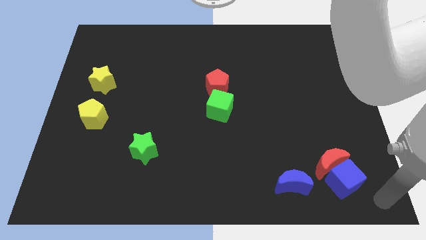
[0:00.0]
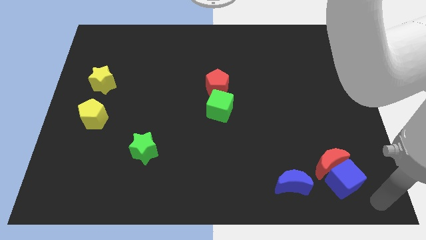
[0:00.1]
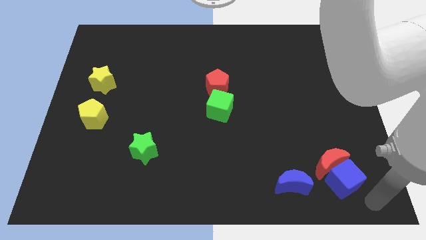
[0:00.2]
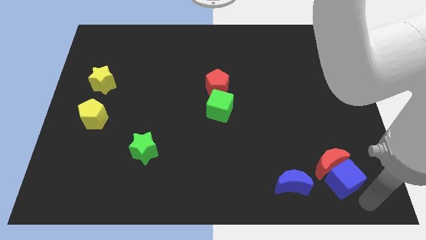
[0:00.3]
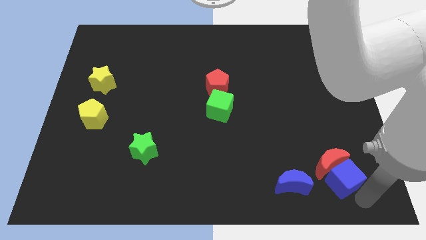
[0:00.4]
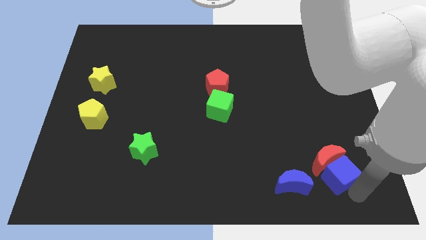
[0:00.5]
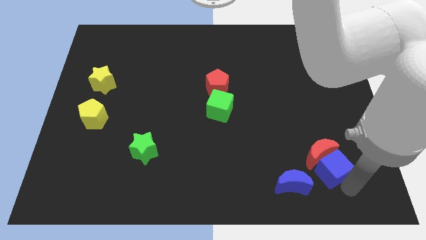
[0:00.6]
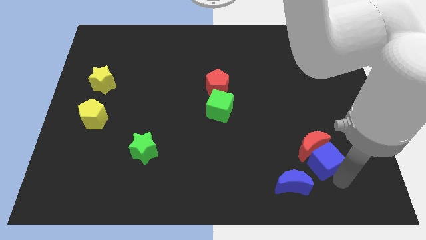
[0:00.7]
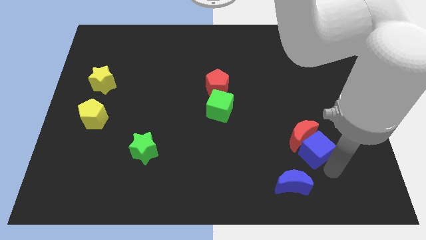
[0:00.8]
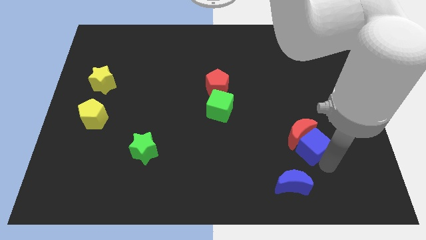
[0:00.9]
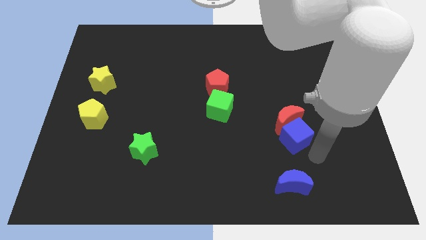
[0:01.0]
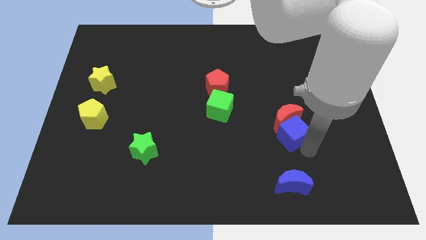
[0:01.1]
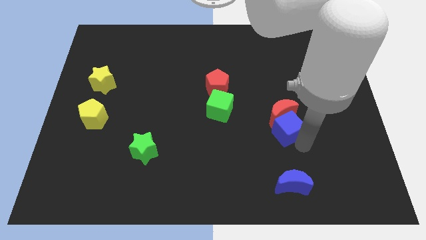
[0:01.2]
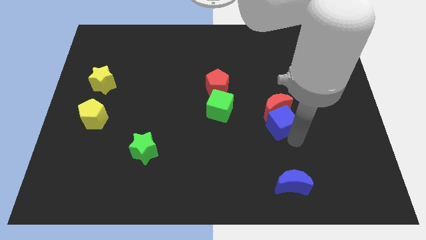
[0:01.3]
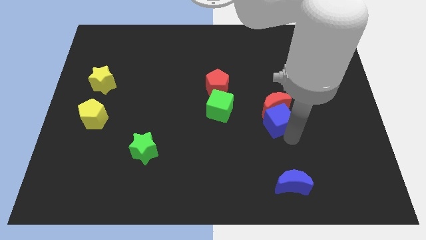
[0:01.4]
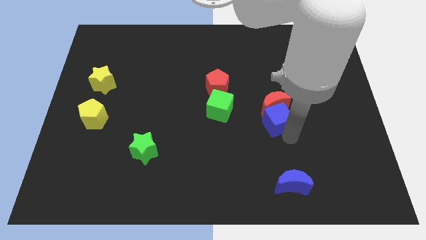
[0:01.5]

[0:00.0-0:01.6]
move the blue cube and red moon to the right side of the green cube

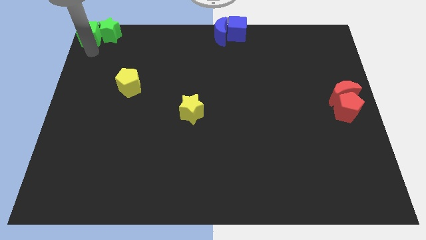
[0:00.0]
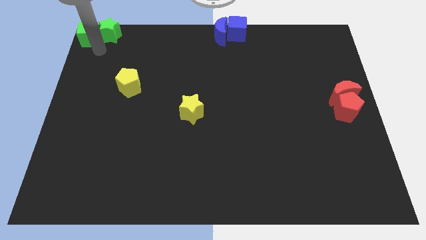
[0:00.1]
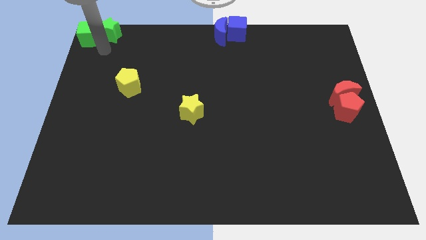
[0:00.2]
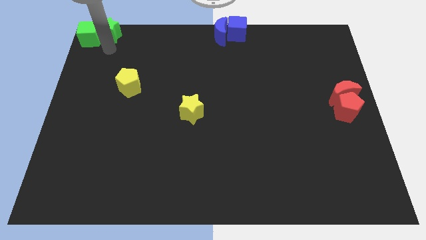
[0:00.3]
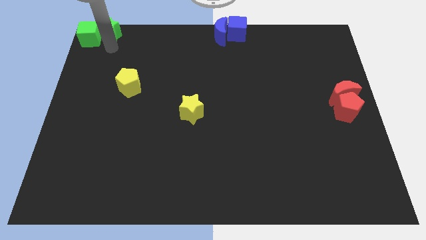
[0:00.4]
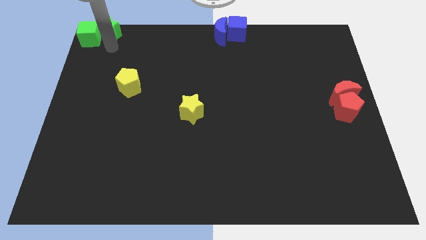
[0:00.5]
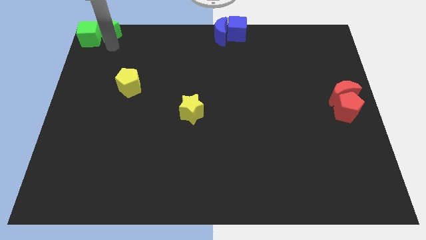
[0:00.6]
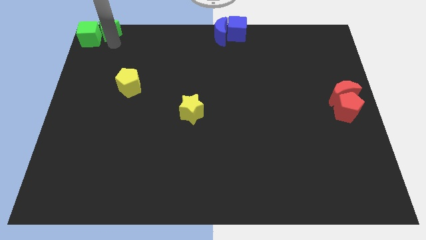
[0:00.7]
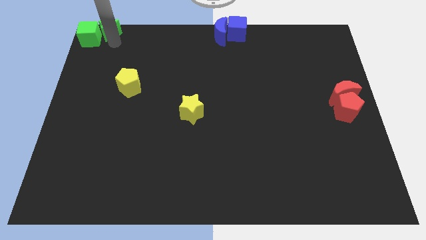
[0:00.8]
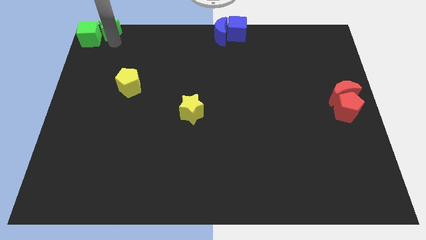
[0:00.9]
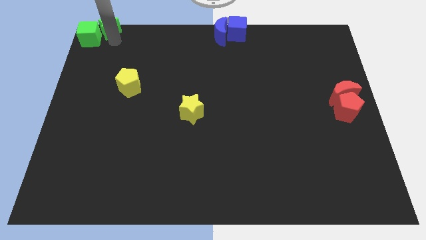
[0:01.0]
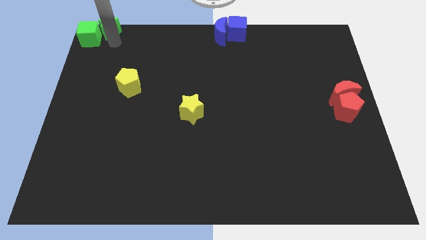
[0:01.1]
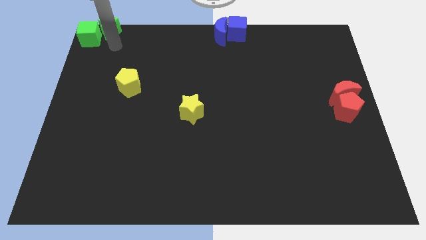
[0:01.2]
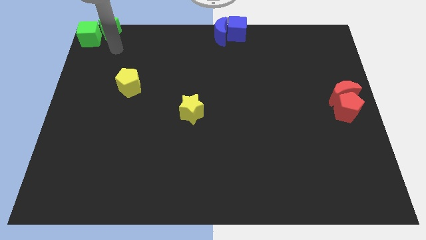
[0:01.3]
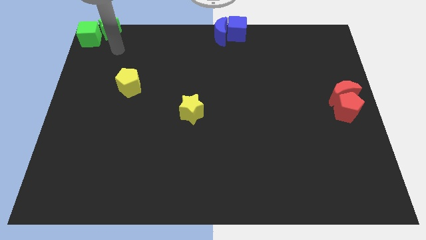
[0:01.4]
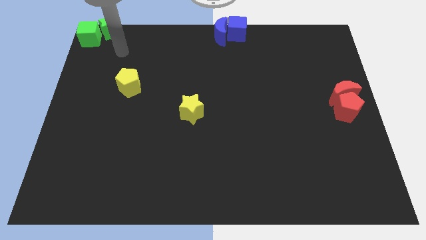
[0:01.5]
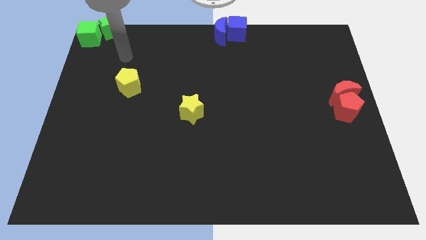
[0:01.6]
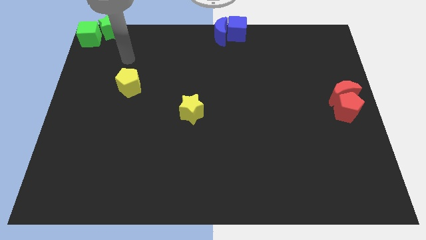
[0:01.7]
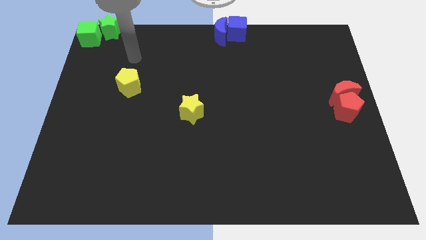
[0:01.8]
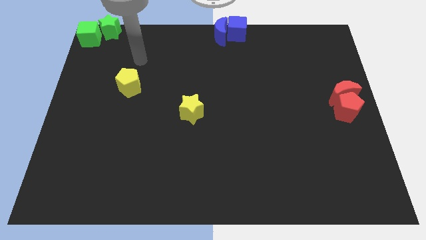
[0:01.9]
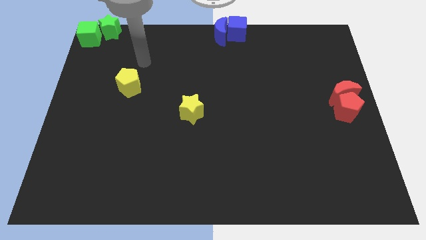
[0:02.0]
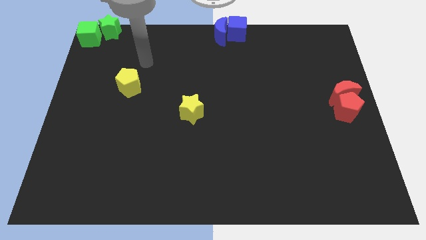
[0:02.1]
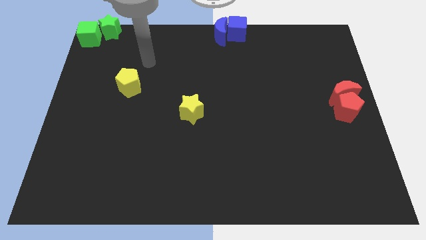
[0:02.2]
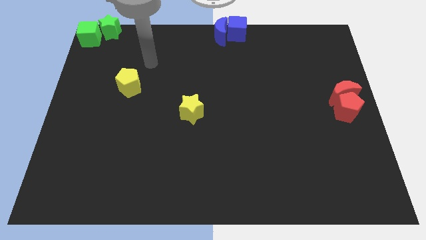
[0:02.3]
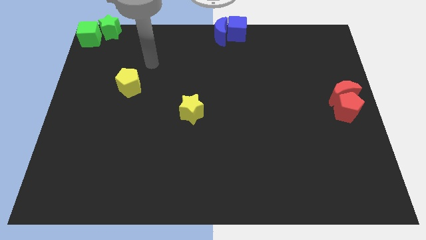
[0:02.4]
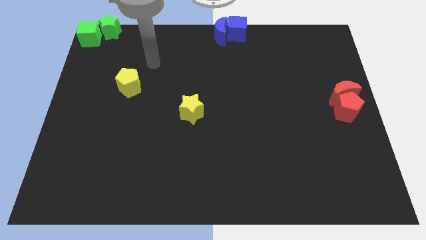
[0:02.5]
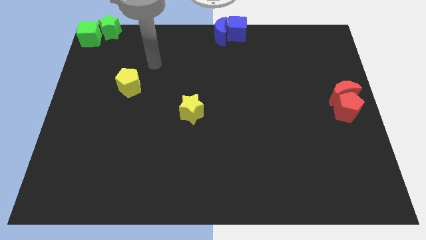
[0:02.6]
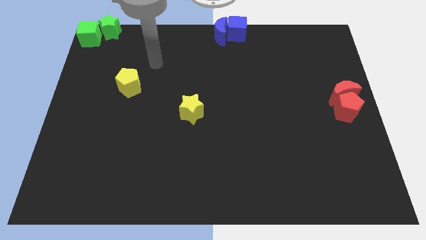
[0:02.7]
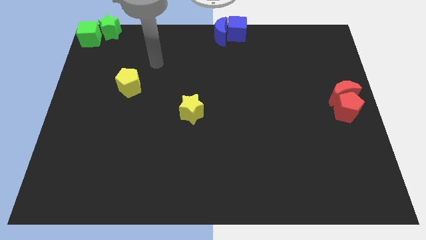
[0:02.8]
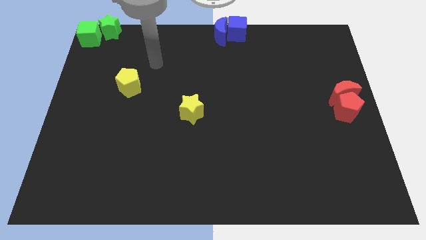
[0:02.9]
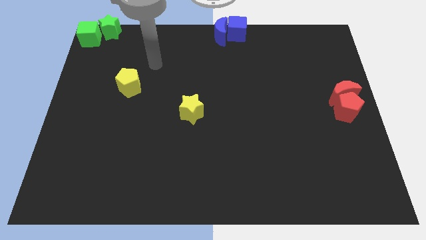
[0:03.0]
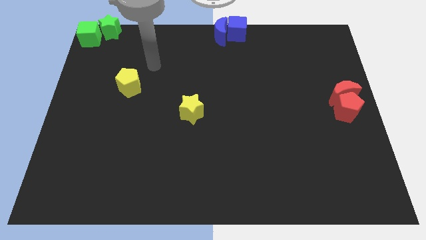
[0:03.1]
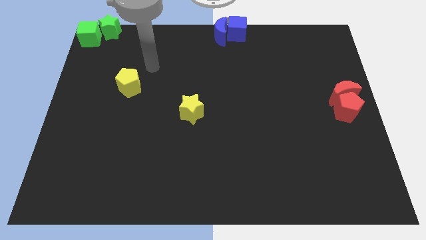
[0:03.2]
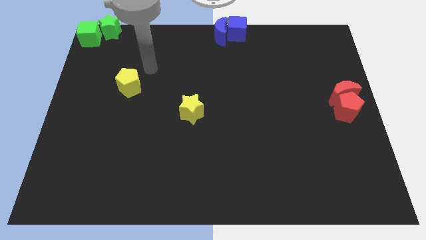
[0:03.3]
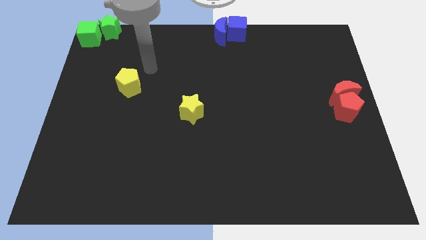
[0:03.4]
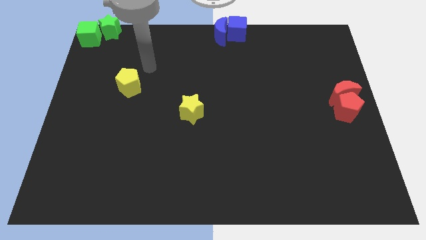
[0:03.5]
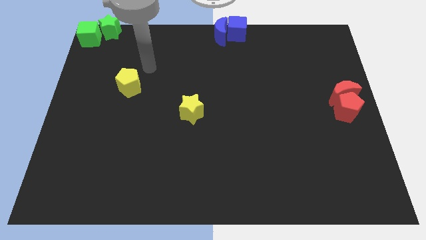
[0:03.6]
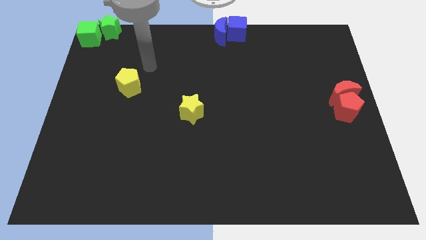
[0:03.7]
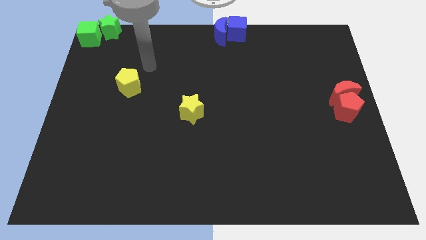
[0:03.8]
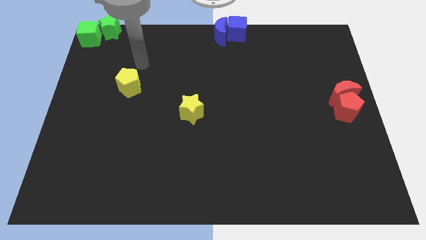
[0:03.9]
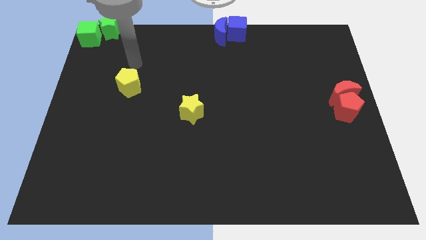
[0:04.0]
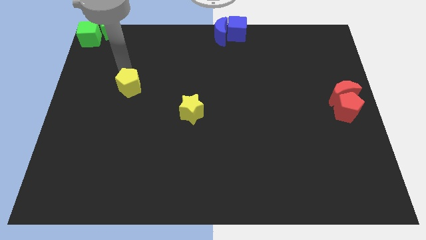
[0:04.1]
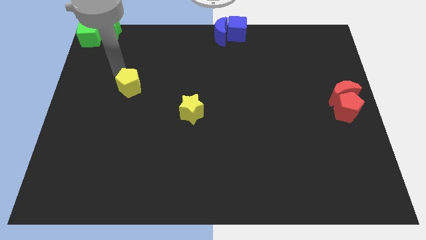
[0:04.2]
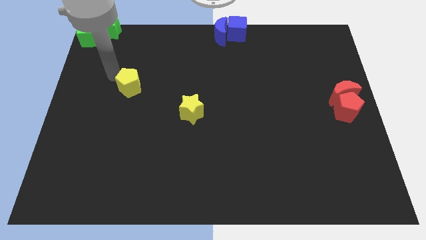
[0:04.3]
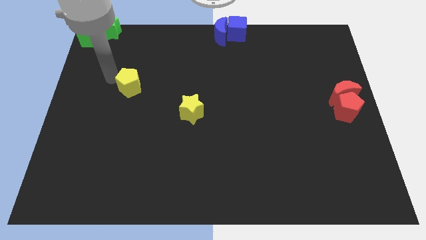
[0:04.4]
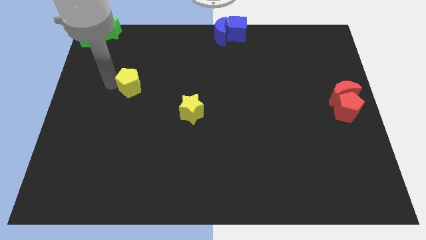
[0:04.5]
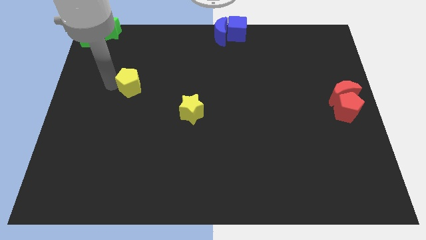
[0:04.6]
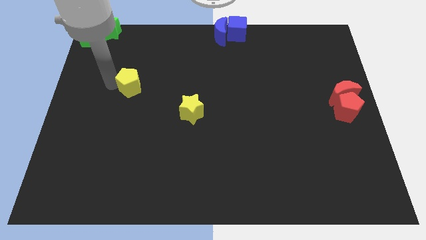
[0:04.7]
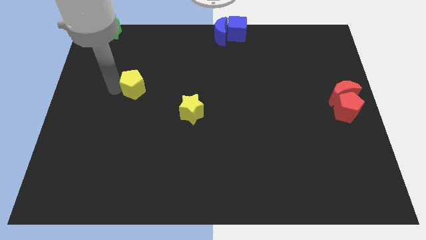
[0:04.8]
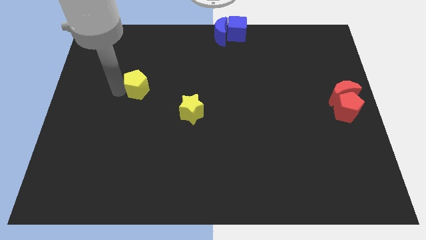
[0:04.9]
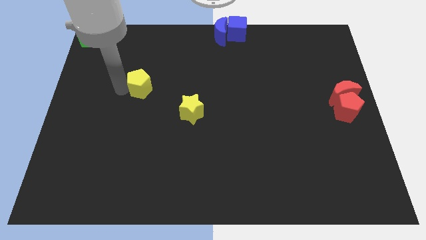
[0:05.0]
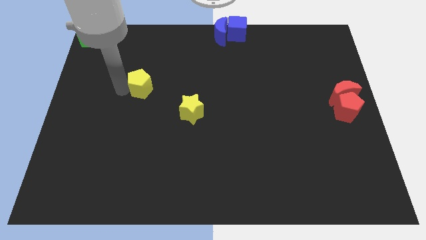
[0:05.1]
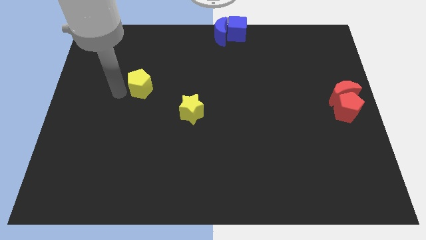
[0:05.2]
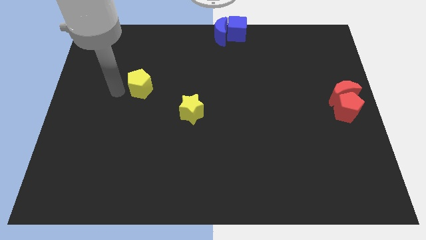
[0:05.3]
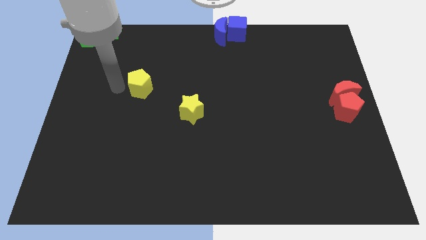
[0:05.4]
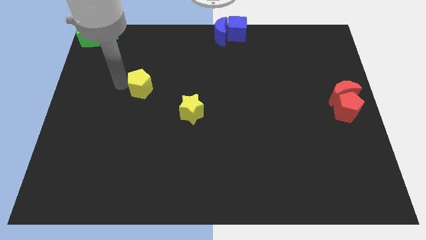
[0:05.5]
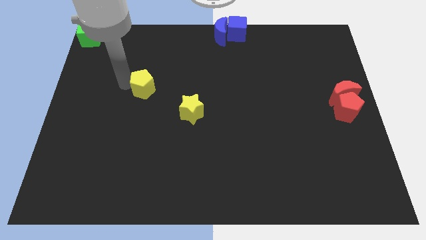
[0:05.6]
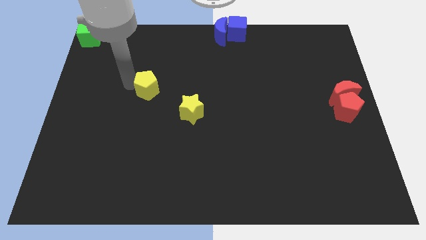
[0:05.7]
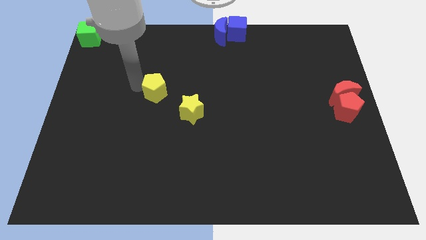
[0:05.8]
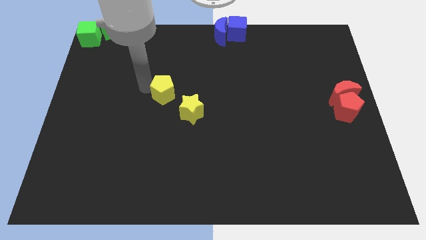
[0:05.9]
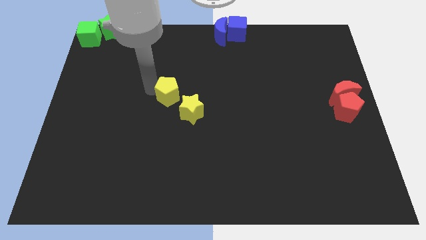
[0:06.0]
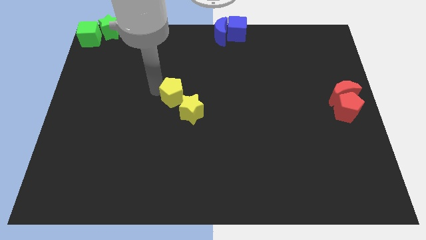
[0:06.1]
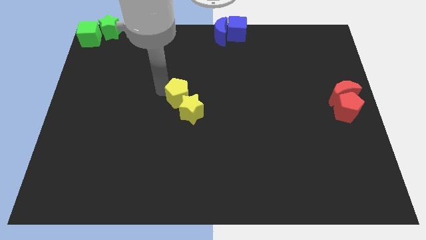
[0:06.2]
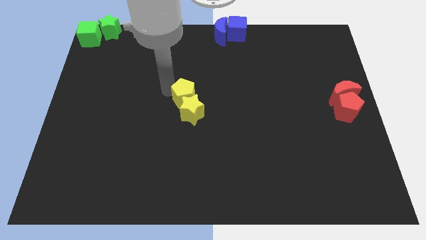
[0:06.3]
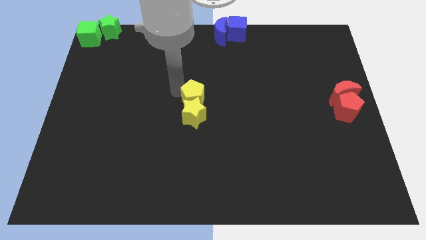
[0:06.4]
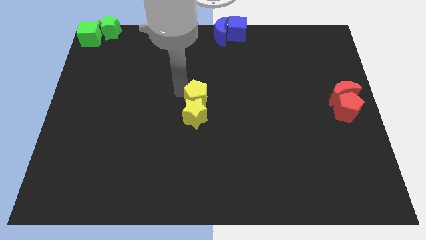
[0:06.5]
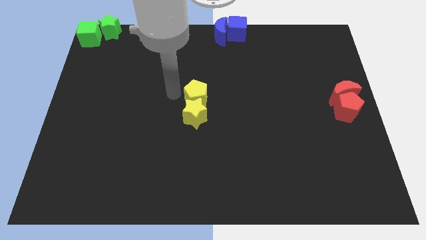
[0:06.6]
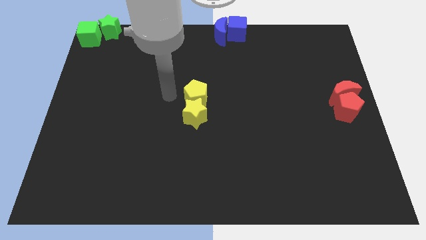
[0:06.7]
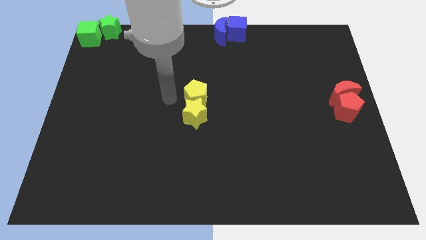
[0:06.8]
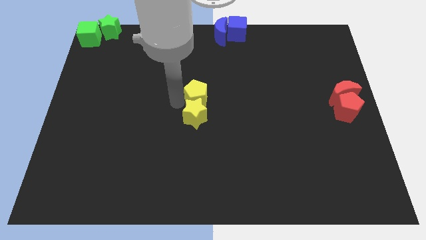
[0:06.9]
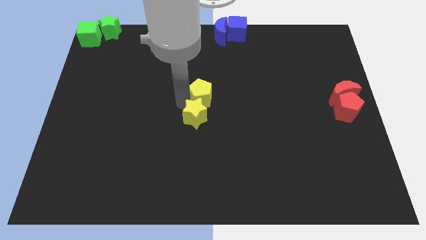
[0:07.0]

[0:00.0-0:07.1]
drag the yellow pentagon at the center of the board

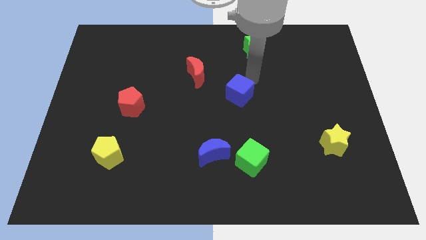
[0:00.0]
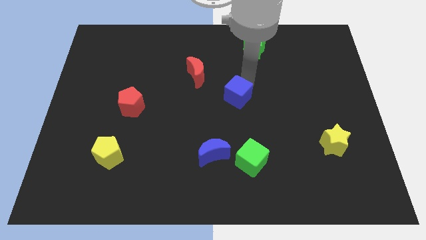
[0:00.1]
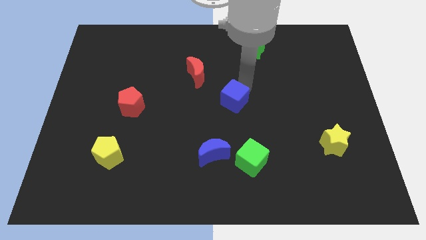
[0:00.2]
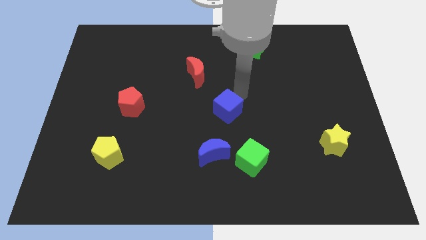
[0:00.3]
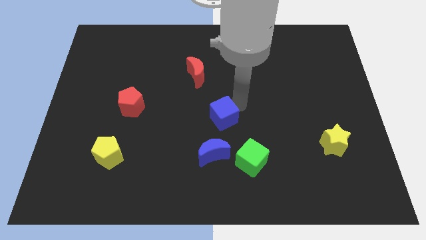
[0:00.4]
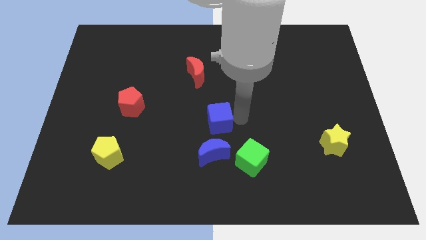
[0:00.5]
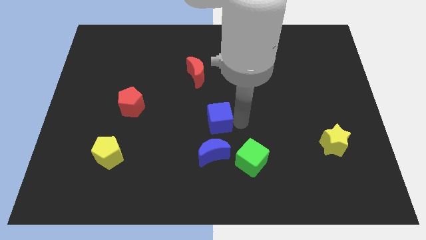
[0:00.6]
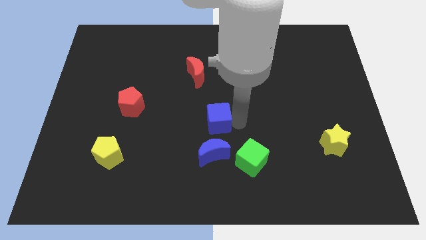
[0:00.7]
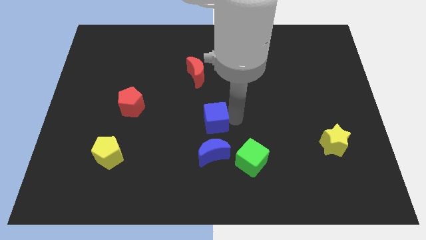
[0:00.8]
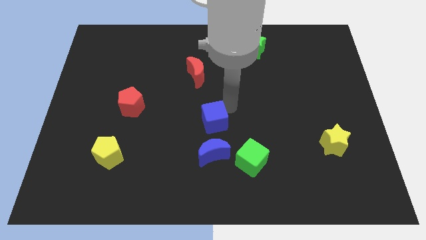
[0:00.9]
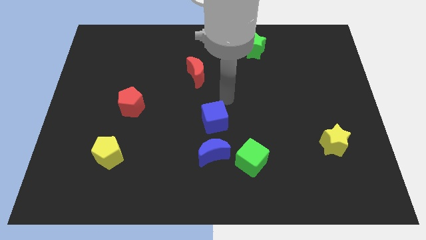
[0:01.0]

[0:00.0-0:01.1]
slide the blue cube to the top of the blue crescent
